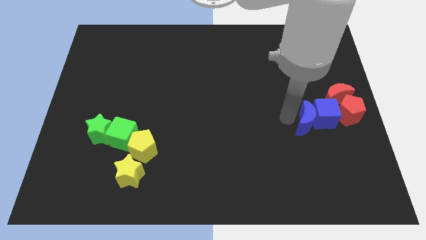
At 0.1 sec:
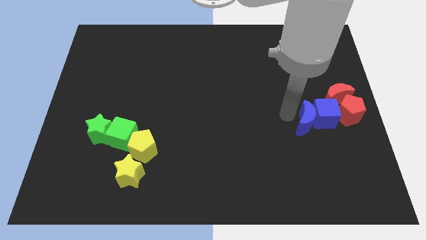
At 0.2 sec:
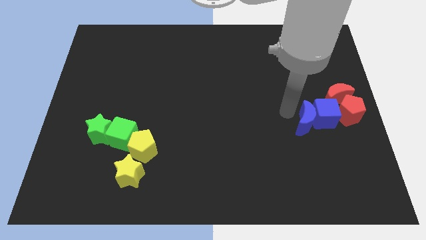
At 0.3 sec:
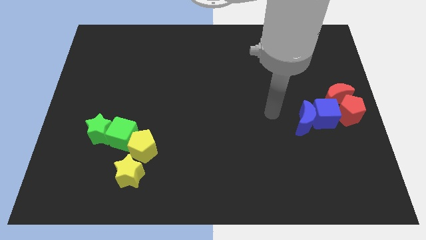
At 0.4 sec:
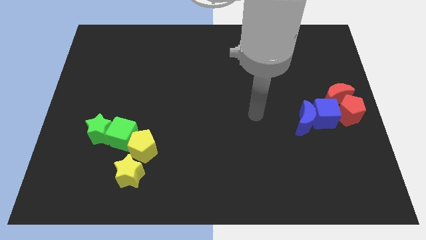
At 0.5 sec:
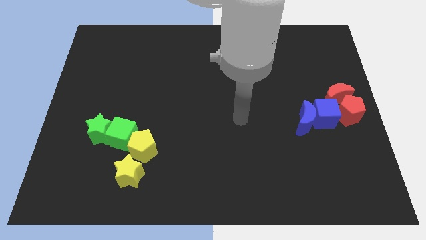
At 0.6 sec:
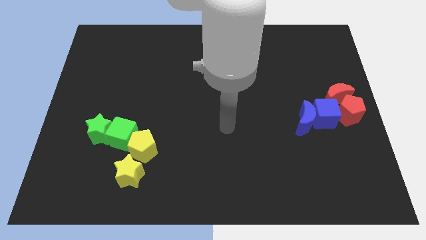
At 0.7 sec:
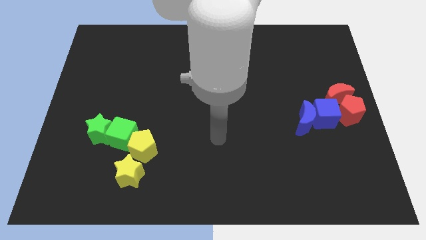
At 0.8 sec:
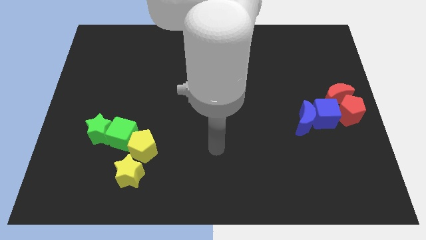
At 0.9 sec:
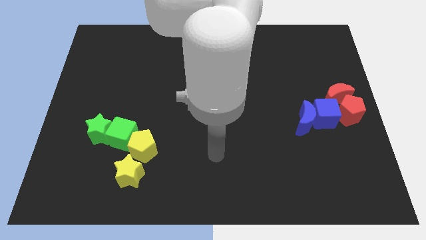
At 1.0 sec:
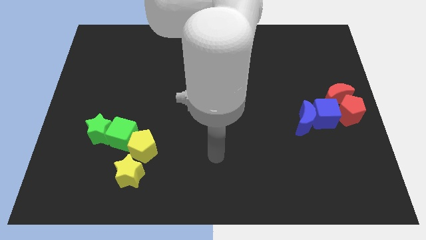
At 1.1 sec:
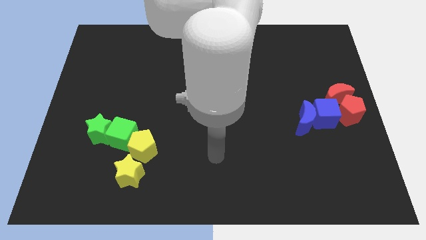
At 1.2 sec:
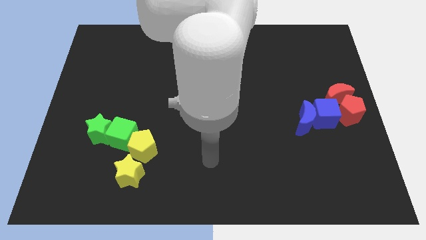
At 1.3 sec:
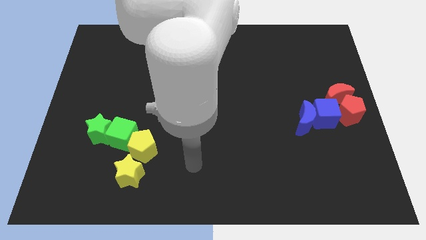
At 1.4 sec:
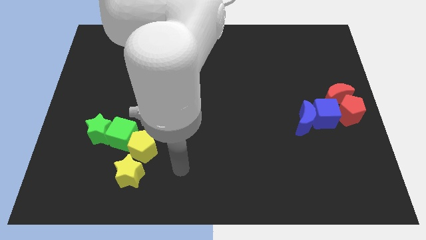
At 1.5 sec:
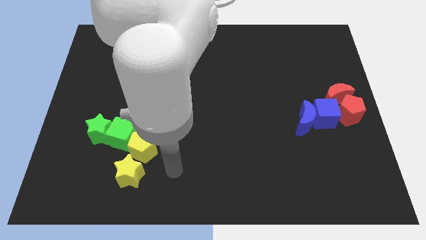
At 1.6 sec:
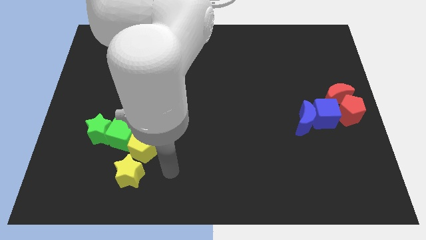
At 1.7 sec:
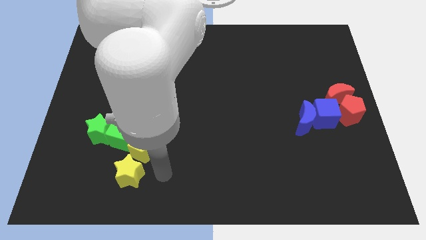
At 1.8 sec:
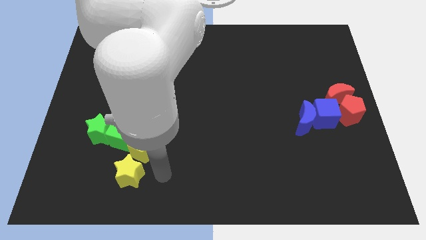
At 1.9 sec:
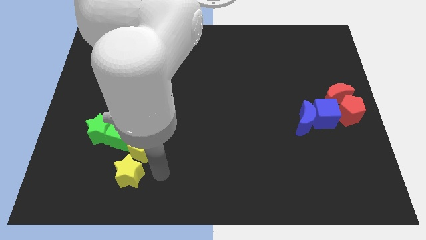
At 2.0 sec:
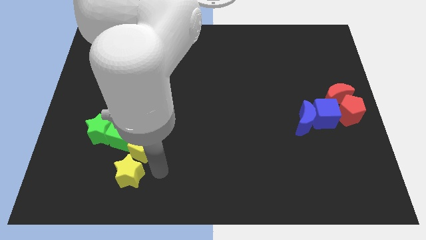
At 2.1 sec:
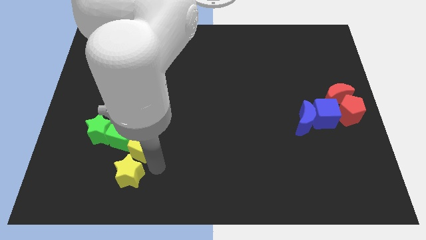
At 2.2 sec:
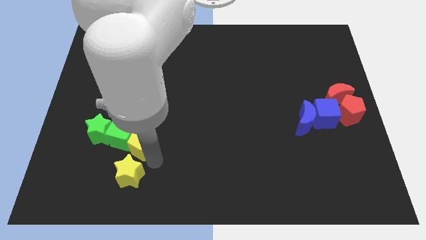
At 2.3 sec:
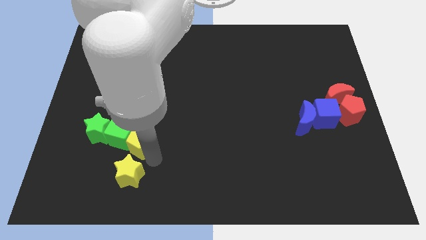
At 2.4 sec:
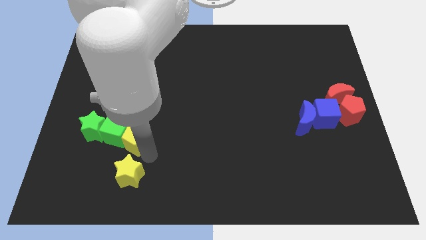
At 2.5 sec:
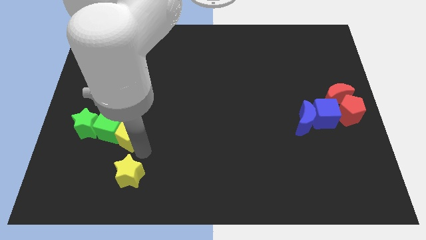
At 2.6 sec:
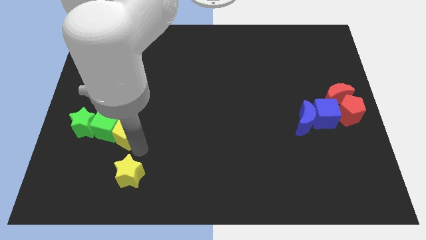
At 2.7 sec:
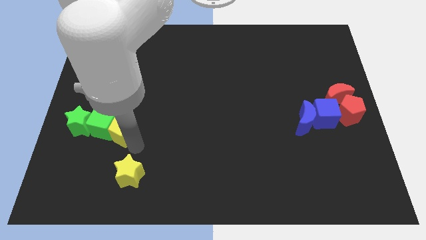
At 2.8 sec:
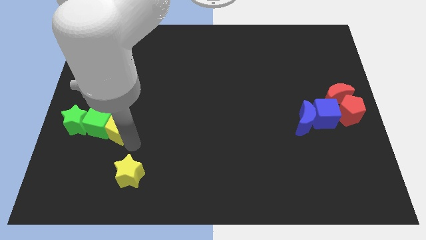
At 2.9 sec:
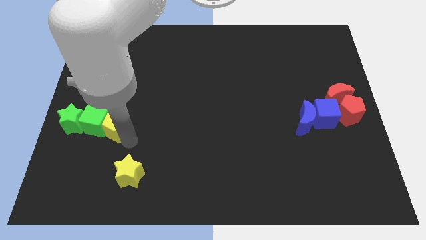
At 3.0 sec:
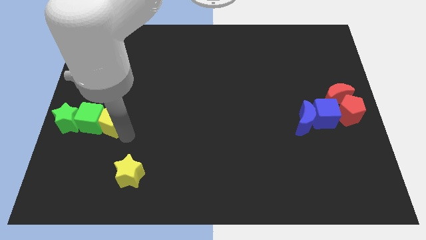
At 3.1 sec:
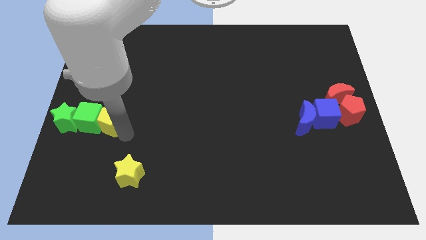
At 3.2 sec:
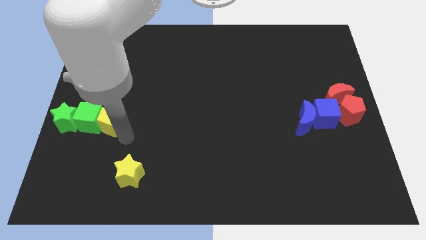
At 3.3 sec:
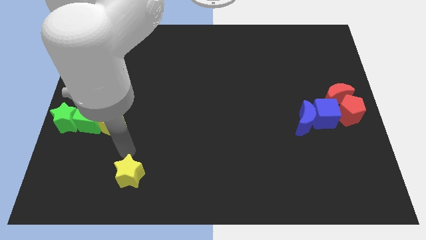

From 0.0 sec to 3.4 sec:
move the yellow pentagon green cube and green star towards the left center of the board

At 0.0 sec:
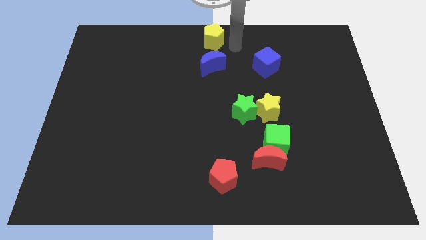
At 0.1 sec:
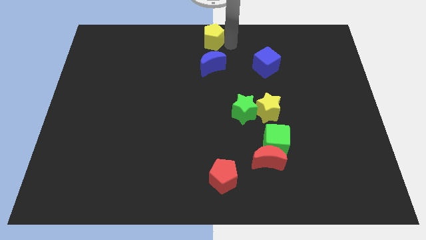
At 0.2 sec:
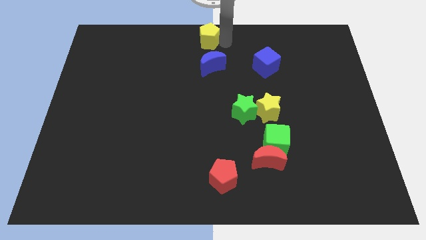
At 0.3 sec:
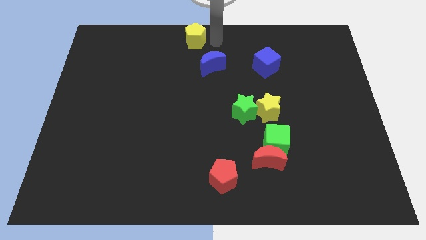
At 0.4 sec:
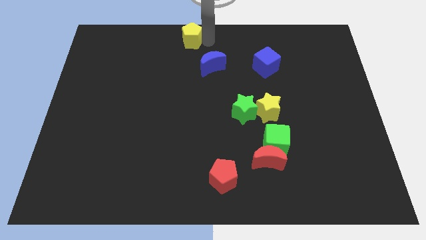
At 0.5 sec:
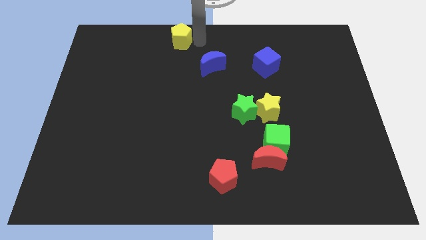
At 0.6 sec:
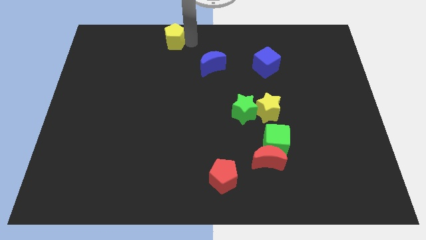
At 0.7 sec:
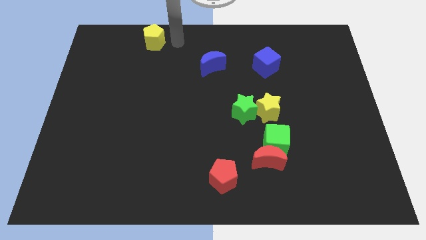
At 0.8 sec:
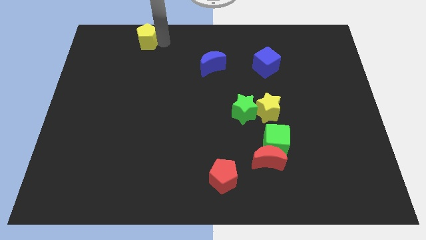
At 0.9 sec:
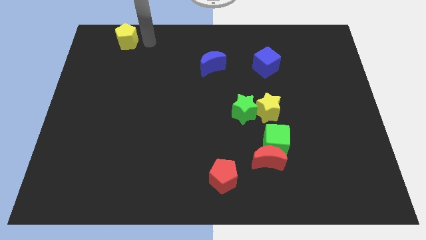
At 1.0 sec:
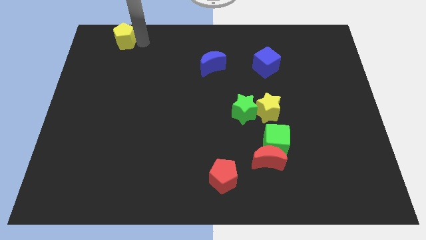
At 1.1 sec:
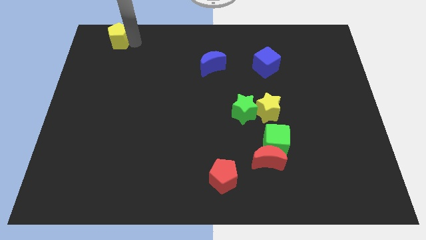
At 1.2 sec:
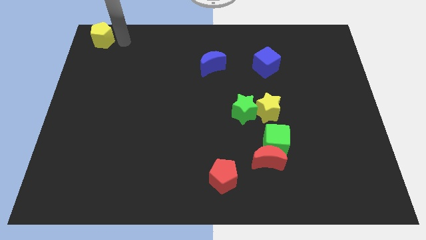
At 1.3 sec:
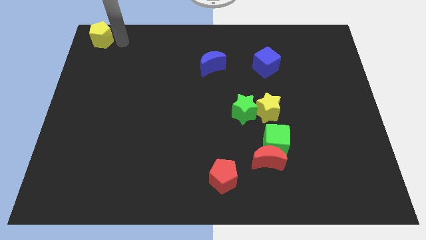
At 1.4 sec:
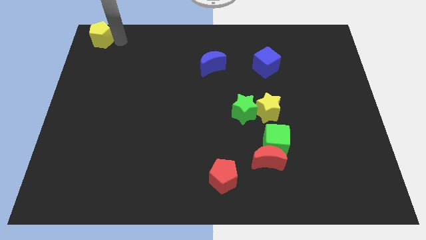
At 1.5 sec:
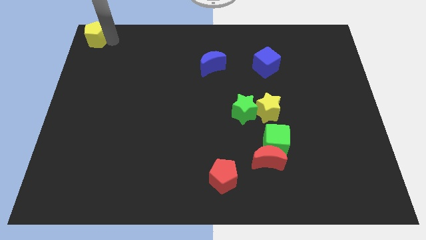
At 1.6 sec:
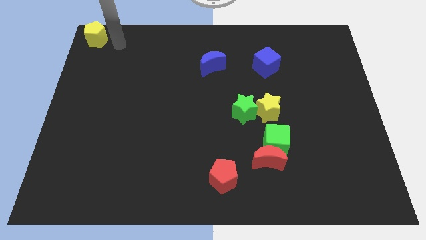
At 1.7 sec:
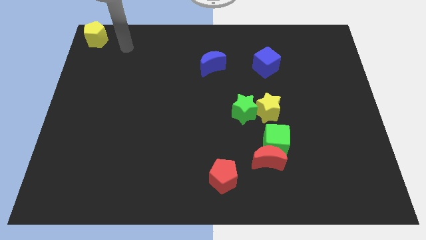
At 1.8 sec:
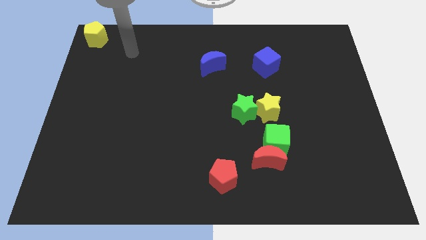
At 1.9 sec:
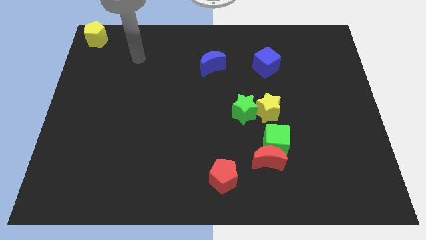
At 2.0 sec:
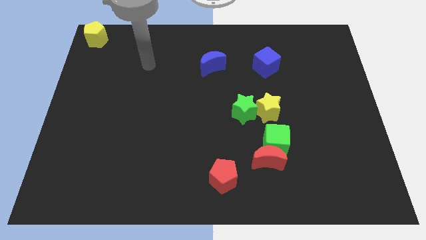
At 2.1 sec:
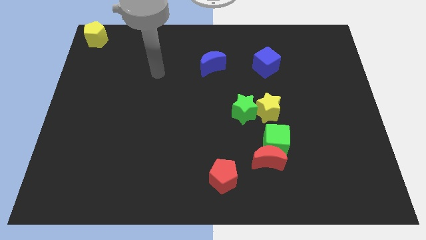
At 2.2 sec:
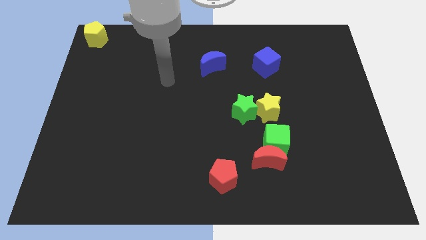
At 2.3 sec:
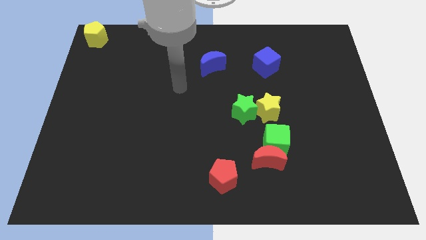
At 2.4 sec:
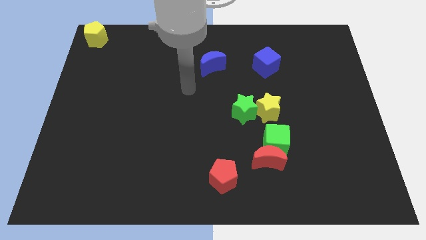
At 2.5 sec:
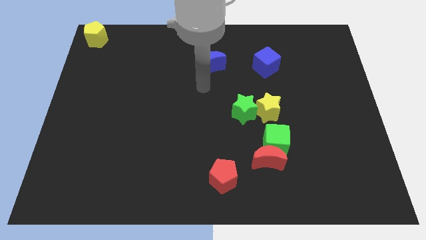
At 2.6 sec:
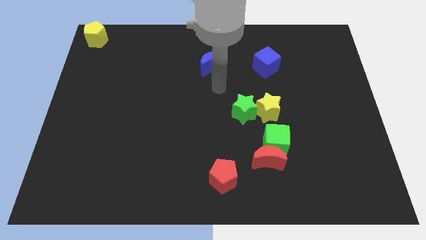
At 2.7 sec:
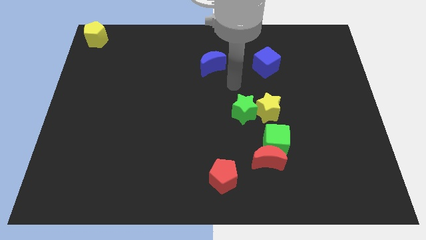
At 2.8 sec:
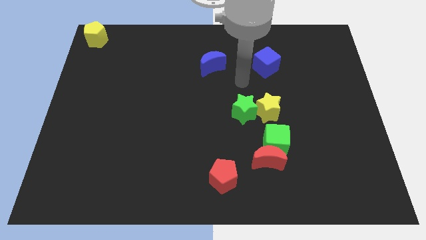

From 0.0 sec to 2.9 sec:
push the yellow pentagon to the top left corner of the board

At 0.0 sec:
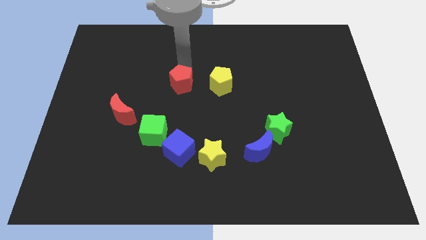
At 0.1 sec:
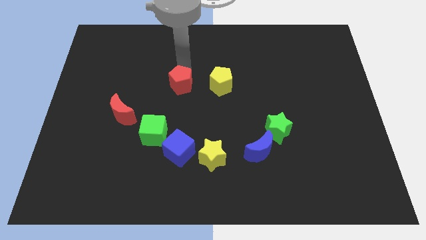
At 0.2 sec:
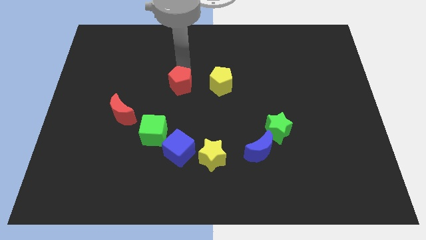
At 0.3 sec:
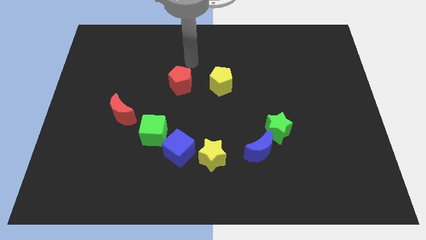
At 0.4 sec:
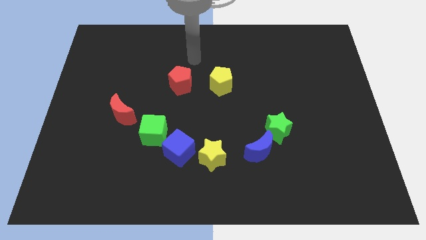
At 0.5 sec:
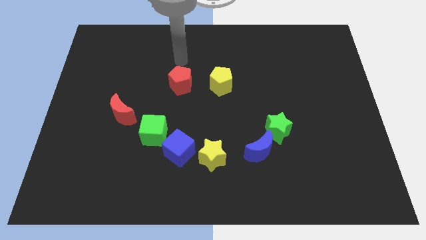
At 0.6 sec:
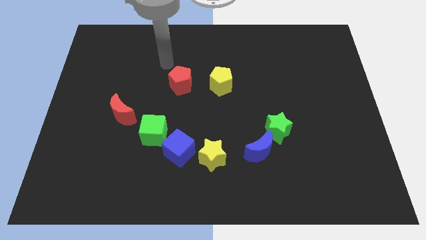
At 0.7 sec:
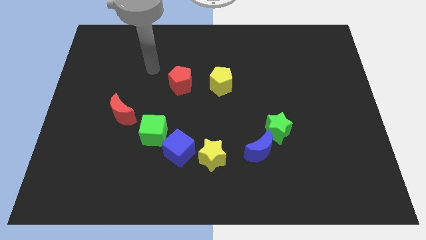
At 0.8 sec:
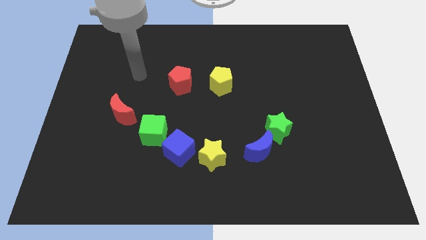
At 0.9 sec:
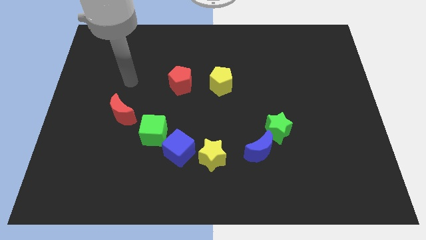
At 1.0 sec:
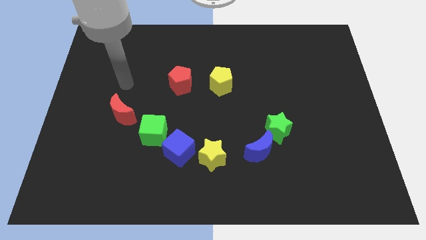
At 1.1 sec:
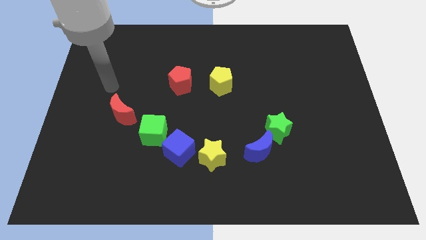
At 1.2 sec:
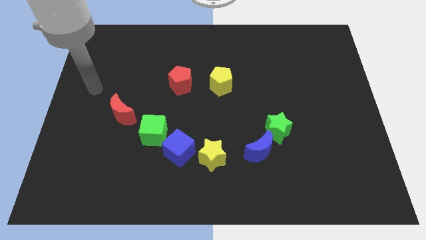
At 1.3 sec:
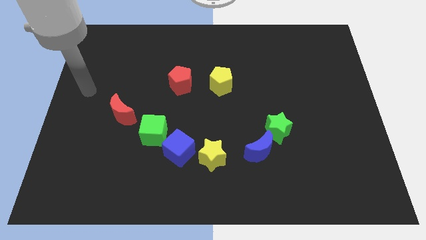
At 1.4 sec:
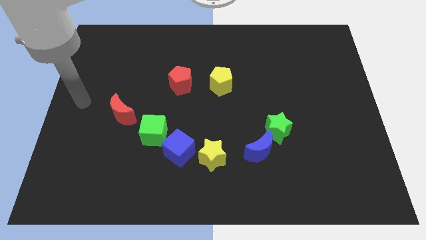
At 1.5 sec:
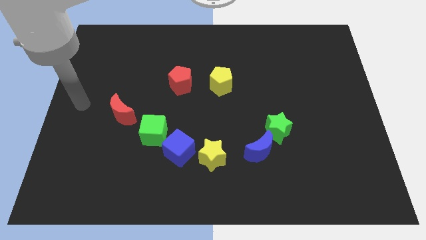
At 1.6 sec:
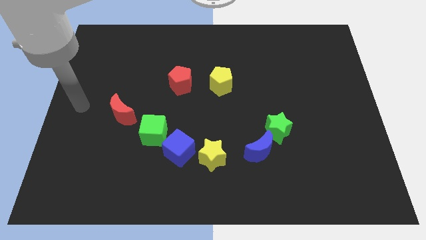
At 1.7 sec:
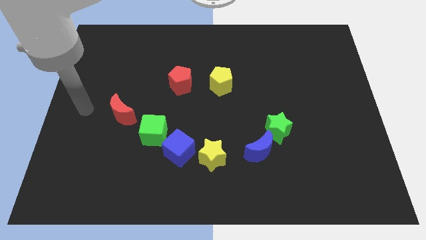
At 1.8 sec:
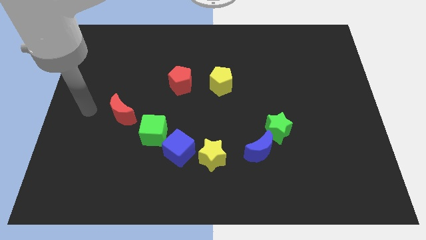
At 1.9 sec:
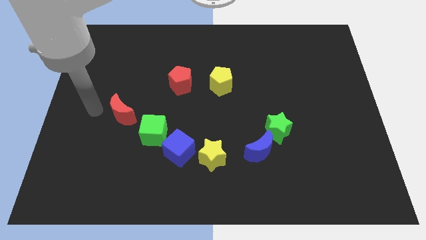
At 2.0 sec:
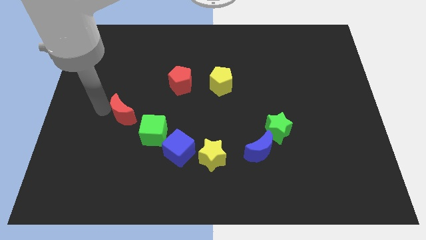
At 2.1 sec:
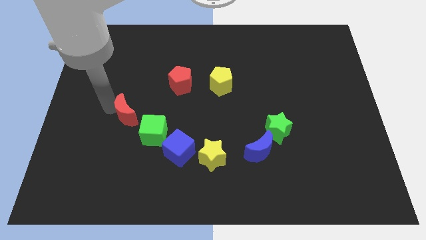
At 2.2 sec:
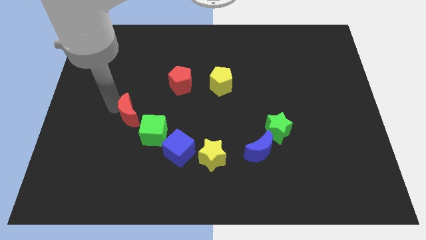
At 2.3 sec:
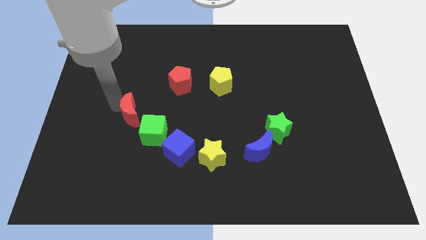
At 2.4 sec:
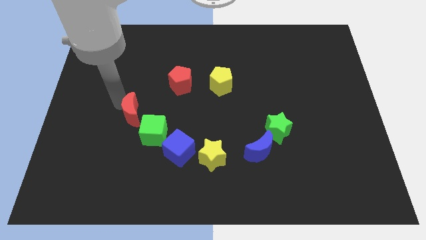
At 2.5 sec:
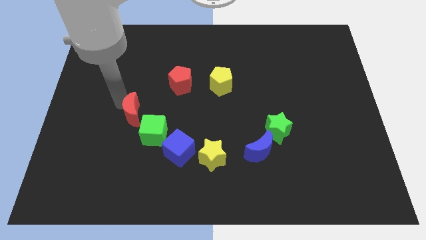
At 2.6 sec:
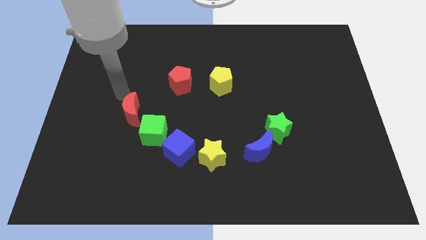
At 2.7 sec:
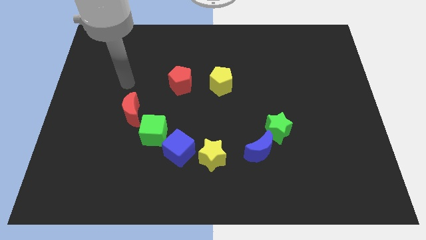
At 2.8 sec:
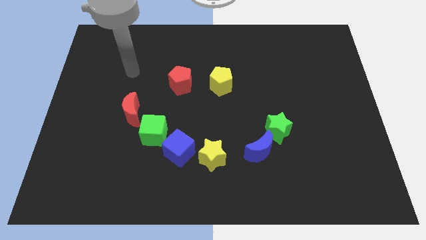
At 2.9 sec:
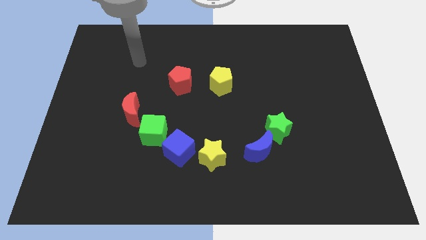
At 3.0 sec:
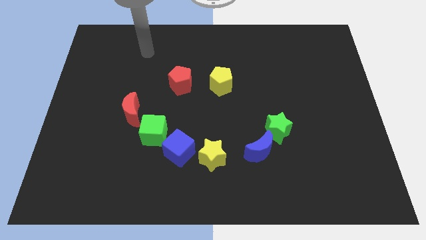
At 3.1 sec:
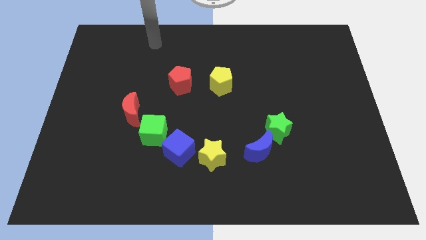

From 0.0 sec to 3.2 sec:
move the red moon to the bottom left side of the green cube
